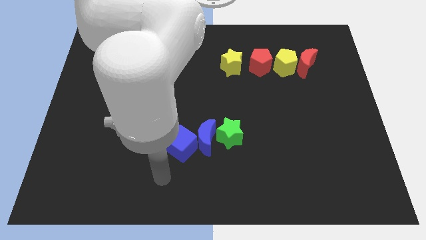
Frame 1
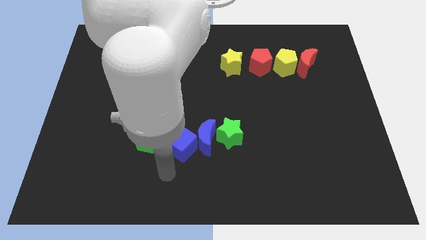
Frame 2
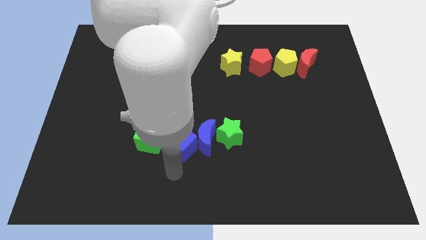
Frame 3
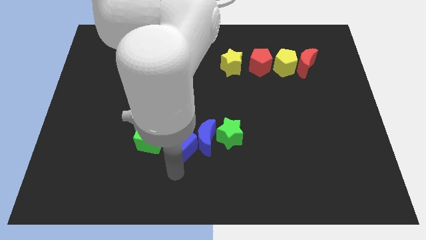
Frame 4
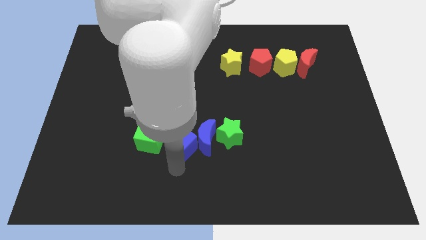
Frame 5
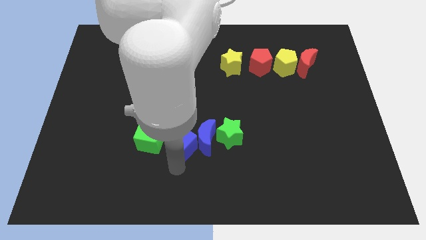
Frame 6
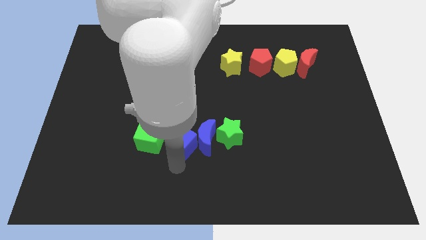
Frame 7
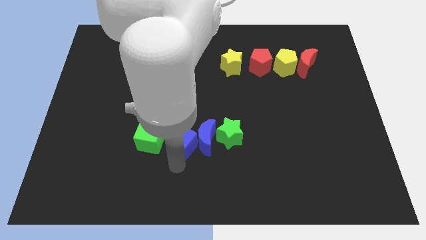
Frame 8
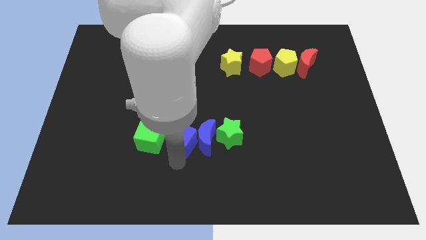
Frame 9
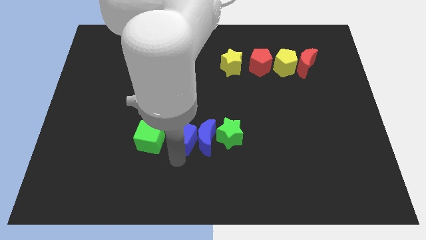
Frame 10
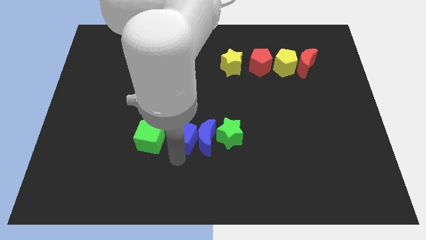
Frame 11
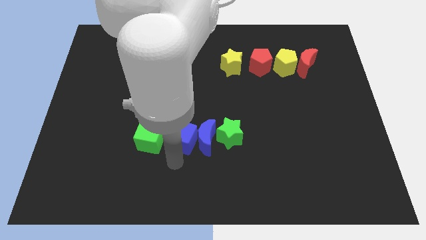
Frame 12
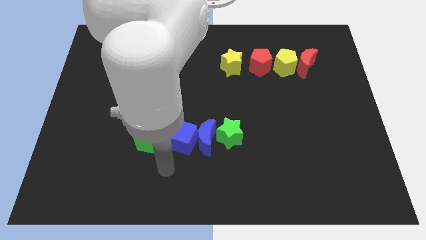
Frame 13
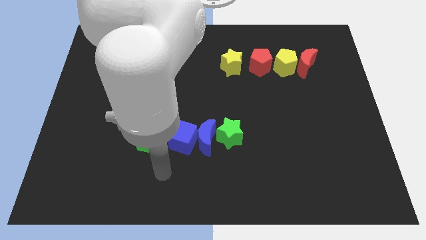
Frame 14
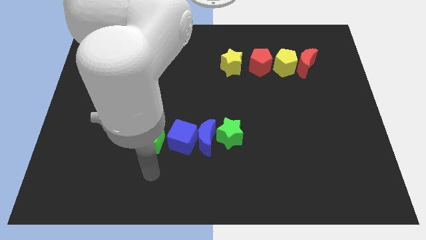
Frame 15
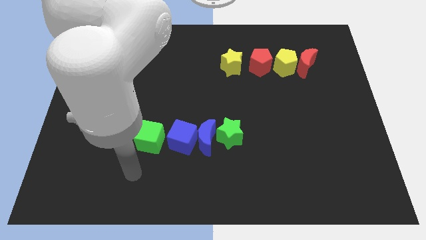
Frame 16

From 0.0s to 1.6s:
push the blue cube slightly upwards

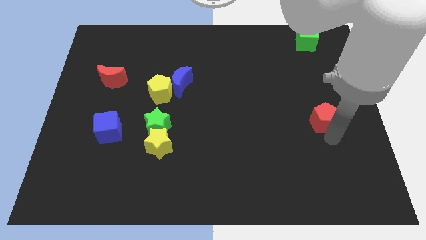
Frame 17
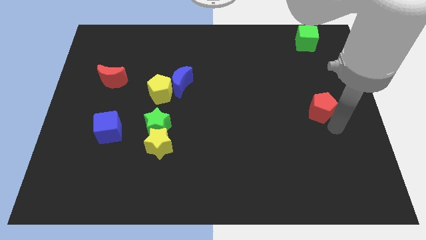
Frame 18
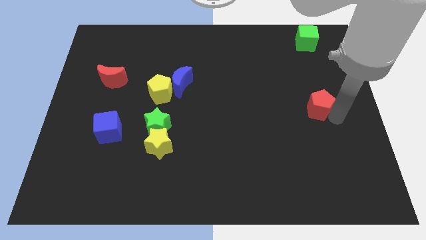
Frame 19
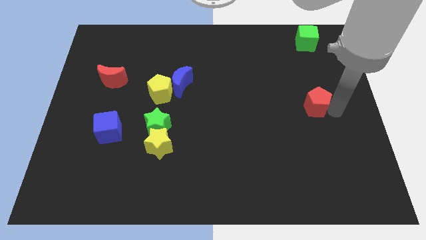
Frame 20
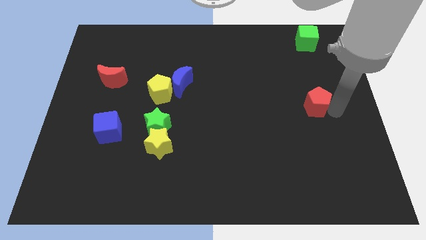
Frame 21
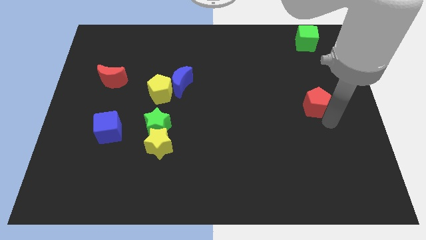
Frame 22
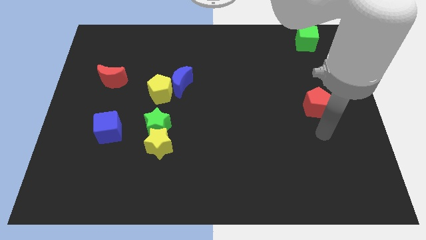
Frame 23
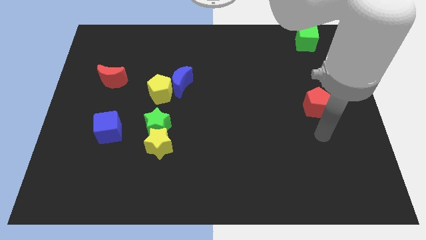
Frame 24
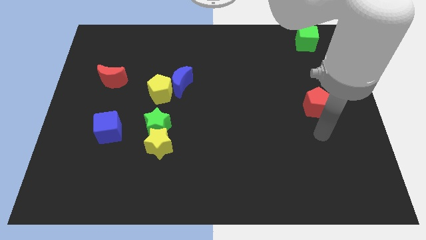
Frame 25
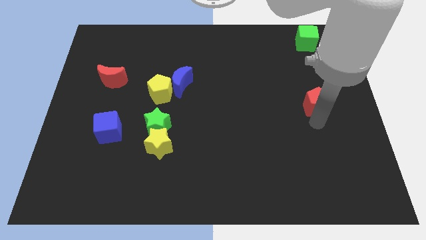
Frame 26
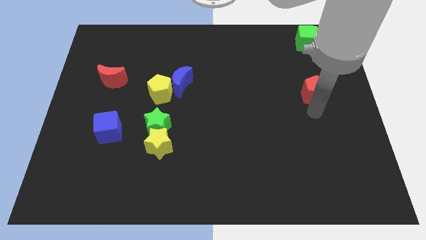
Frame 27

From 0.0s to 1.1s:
move the red pentagon towards the green cube

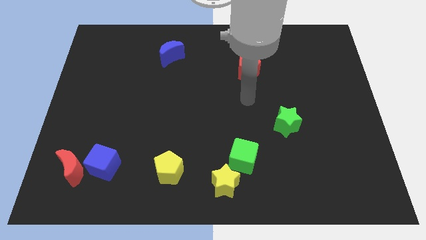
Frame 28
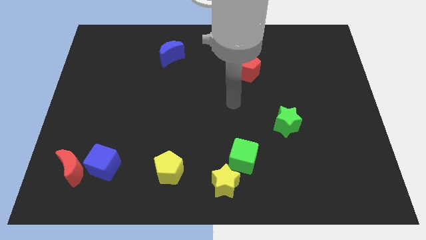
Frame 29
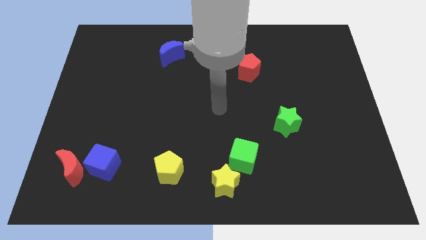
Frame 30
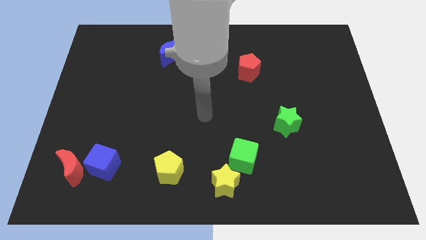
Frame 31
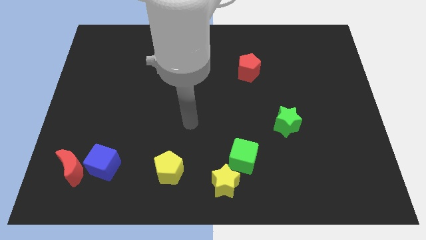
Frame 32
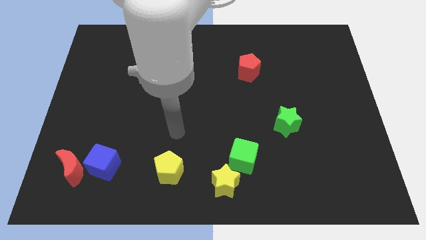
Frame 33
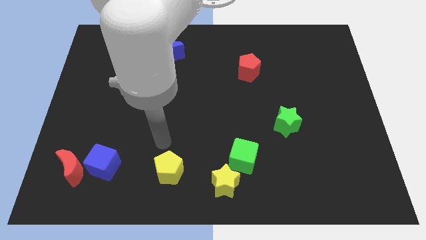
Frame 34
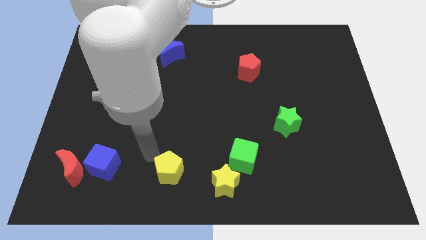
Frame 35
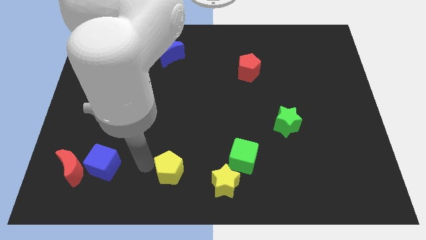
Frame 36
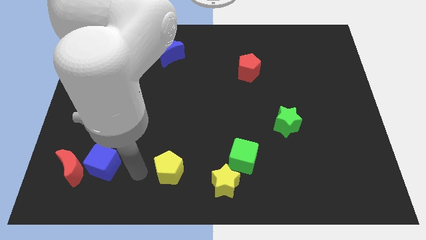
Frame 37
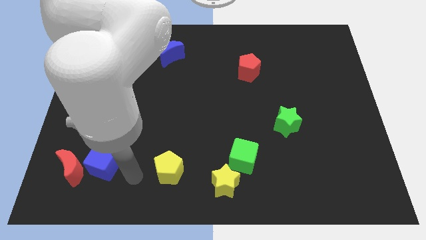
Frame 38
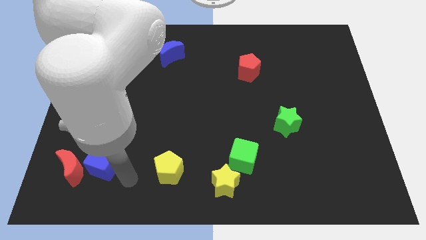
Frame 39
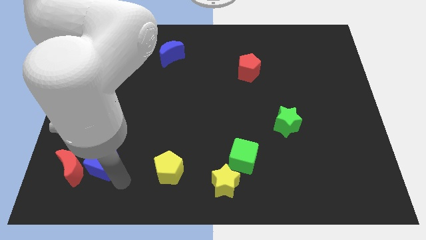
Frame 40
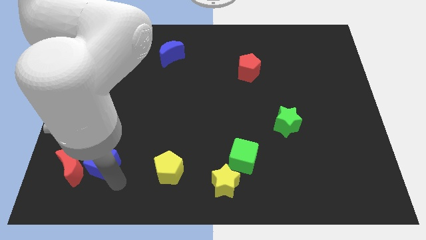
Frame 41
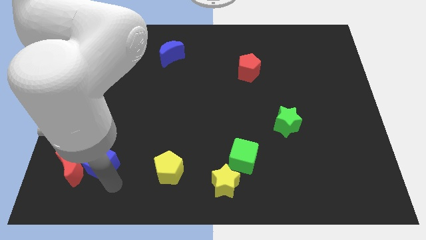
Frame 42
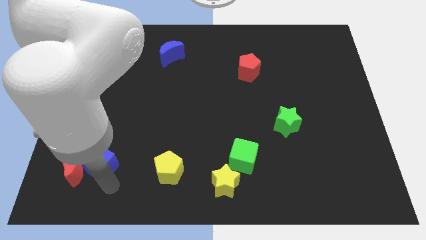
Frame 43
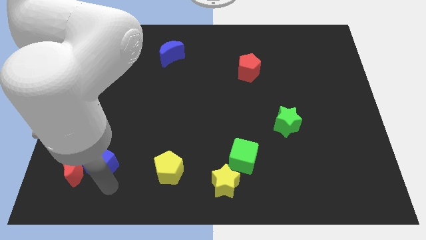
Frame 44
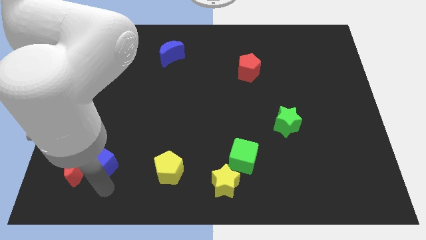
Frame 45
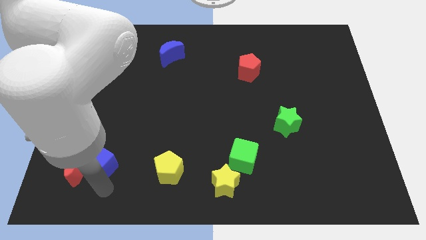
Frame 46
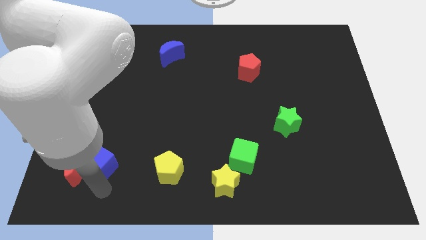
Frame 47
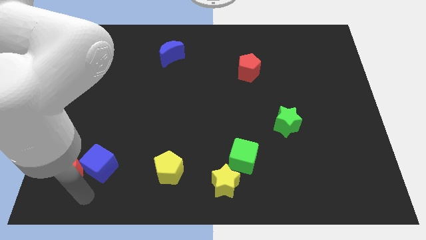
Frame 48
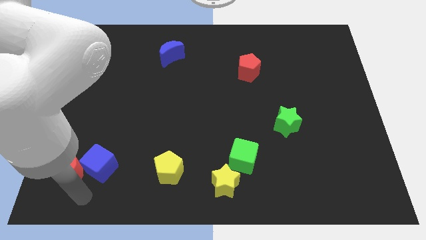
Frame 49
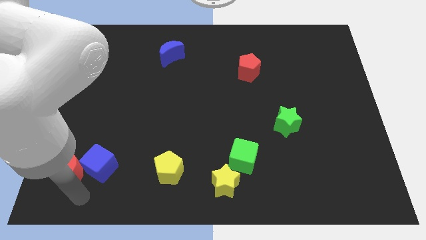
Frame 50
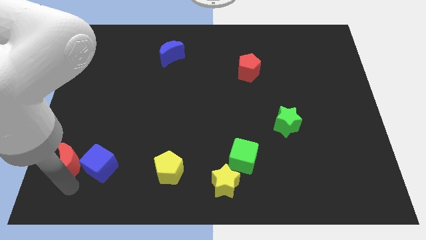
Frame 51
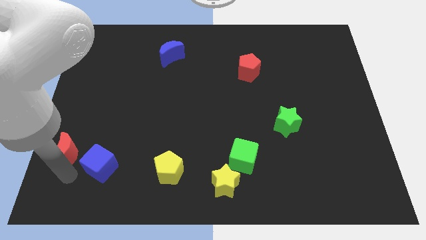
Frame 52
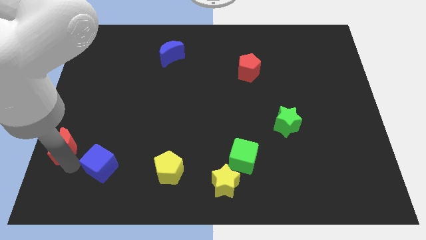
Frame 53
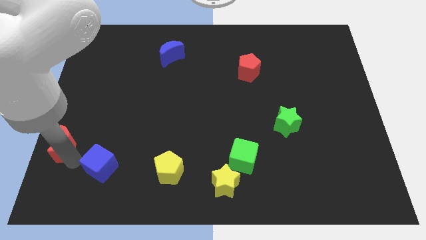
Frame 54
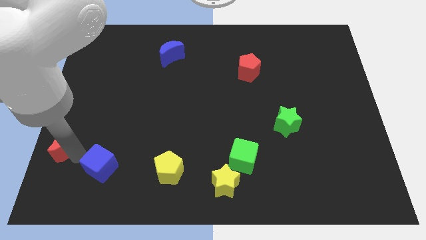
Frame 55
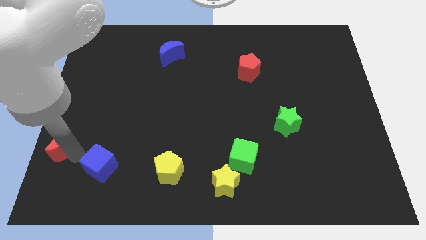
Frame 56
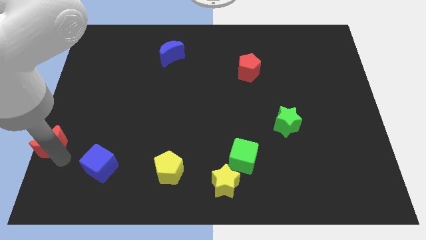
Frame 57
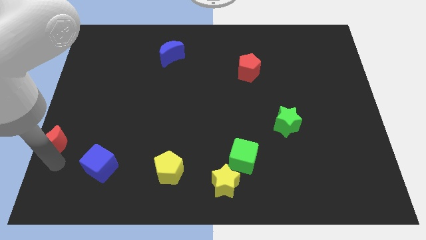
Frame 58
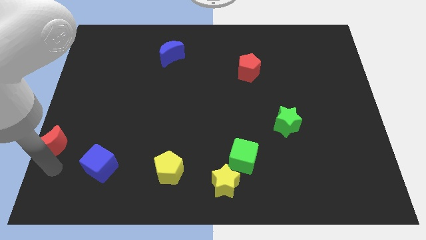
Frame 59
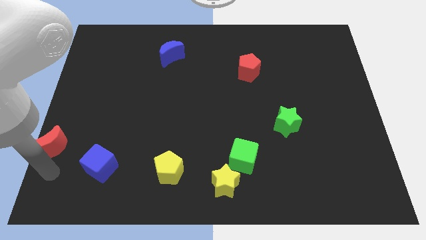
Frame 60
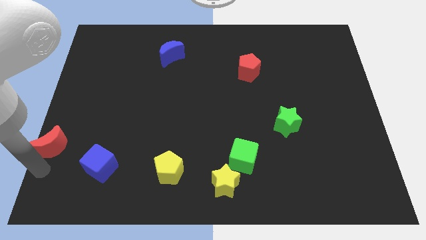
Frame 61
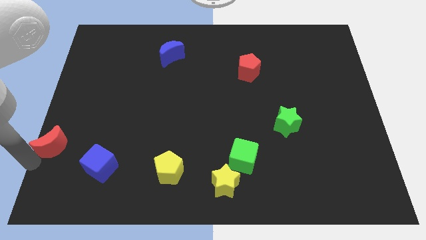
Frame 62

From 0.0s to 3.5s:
slightly push red crescent to the left

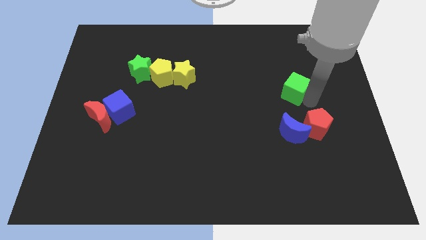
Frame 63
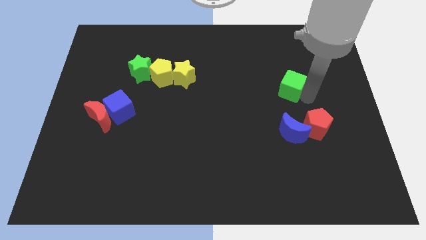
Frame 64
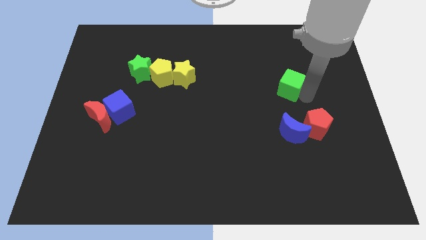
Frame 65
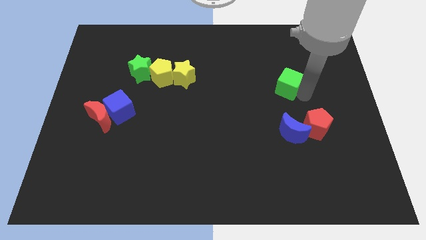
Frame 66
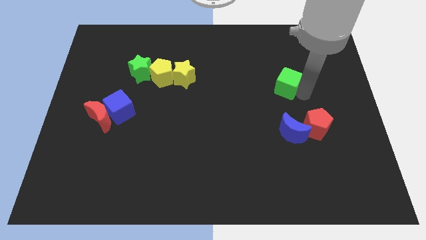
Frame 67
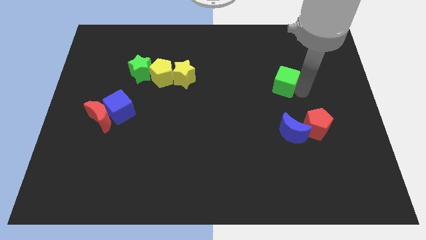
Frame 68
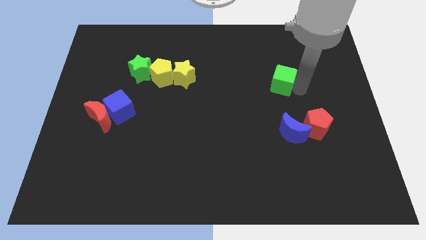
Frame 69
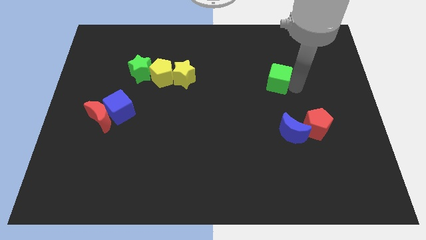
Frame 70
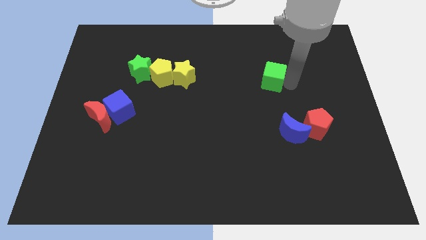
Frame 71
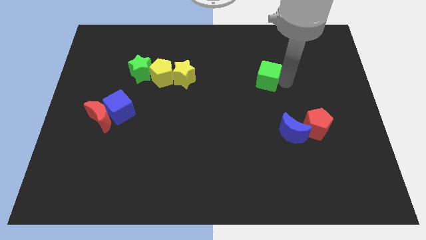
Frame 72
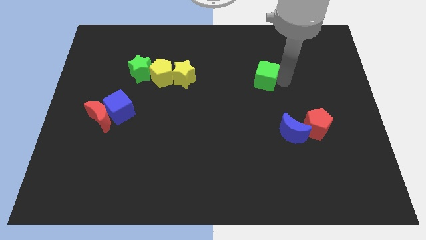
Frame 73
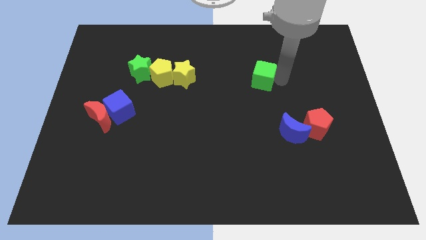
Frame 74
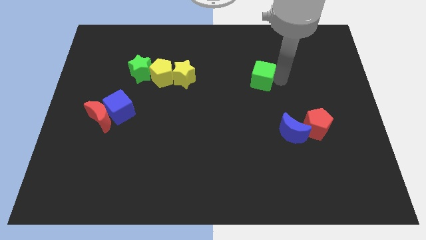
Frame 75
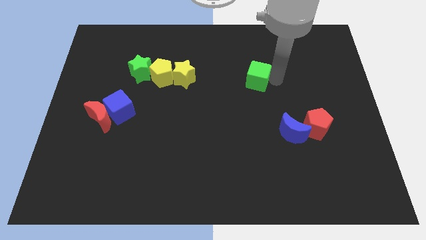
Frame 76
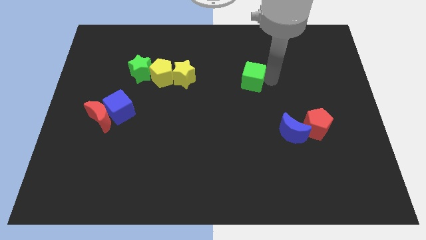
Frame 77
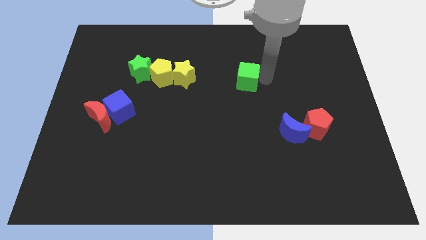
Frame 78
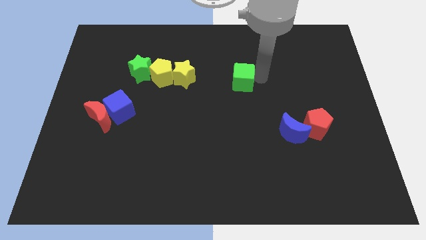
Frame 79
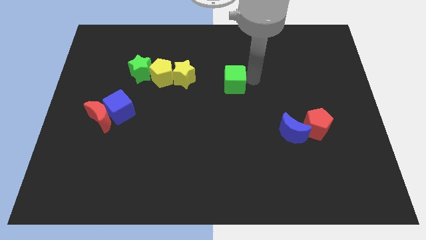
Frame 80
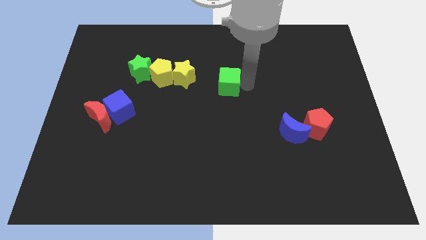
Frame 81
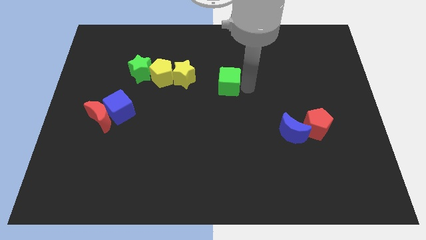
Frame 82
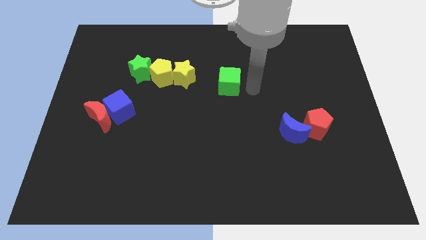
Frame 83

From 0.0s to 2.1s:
push the green cube diagonal to the blue crescent

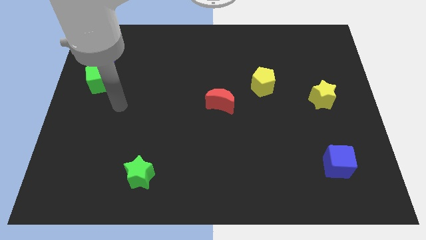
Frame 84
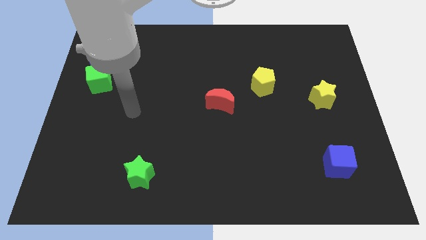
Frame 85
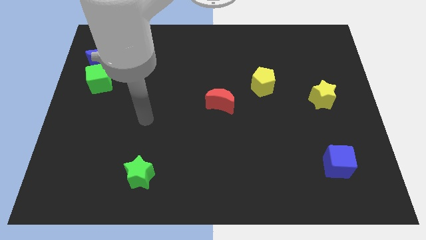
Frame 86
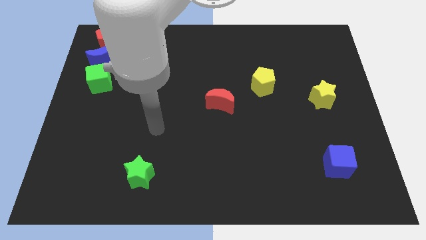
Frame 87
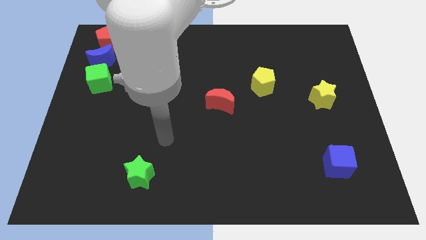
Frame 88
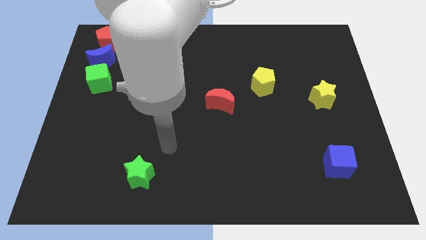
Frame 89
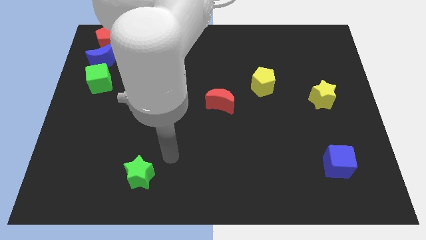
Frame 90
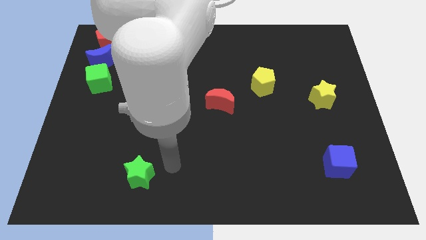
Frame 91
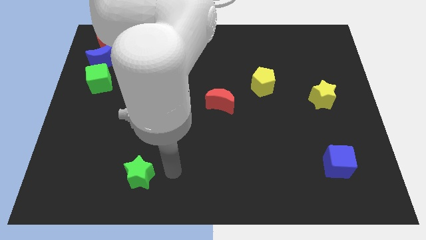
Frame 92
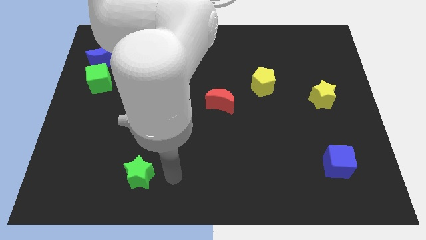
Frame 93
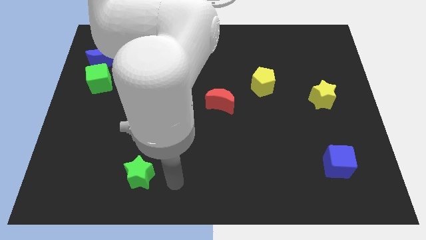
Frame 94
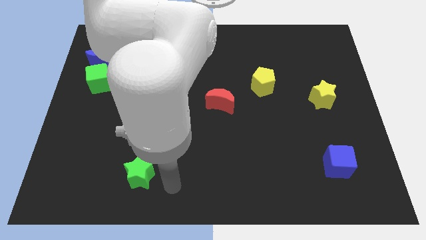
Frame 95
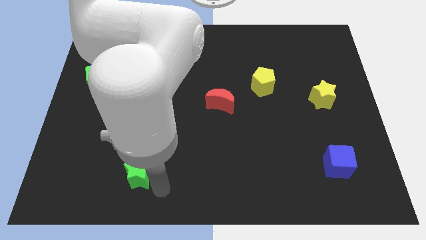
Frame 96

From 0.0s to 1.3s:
place your arm at the bottom right side of green star
